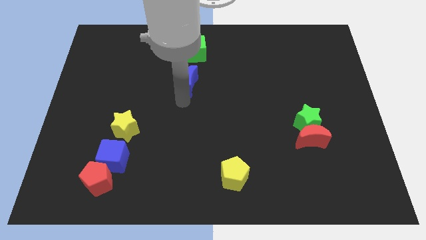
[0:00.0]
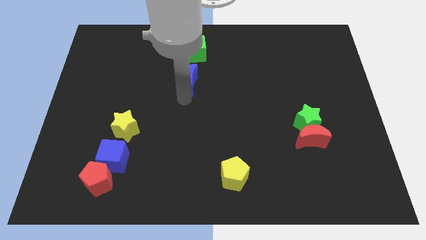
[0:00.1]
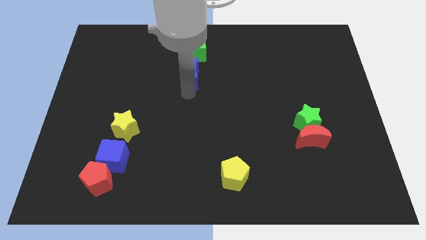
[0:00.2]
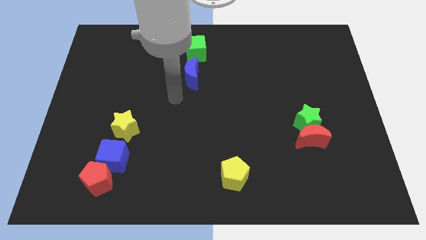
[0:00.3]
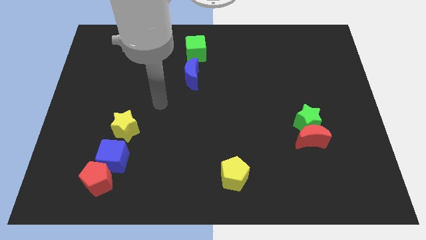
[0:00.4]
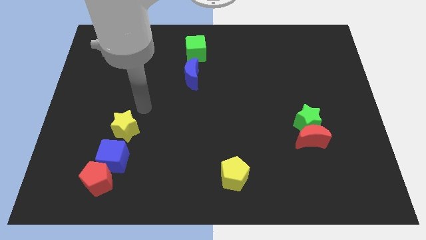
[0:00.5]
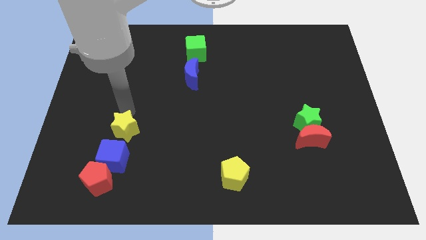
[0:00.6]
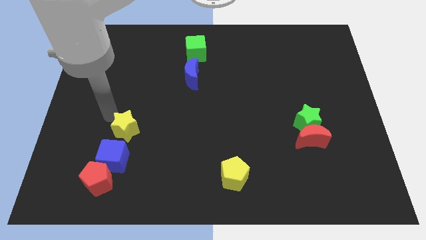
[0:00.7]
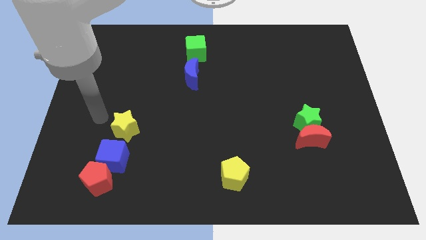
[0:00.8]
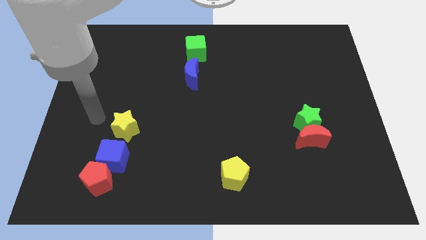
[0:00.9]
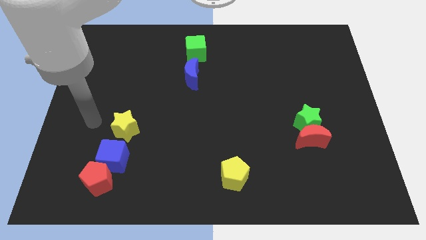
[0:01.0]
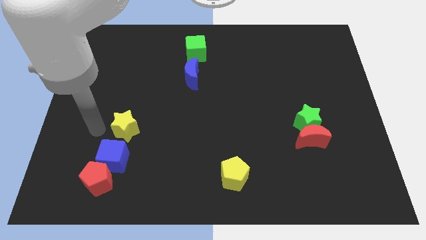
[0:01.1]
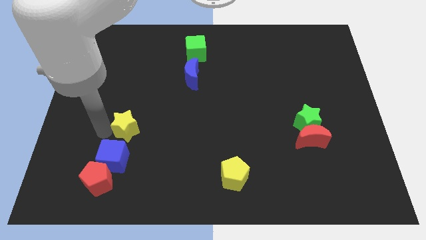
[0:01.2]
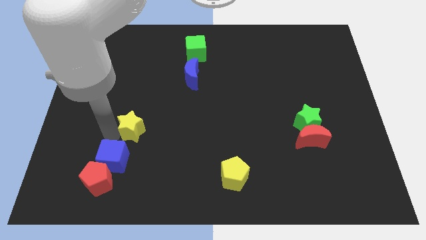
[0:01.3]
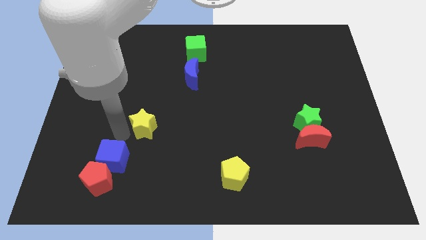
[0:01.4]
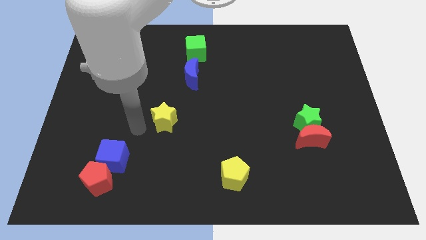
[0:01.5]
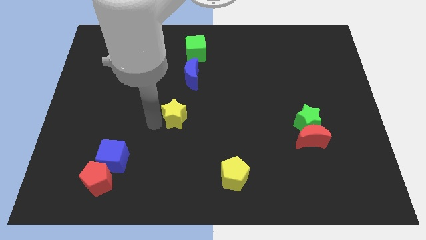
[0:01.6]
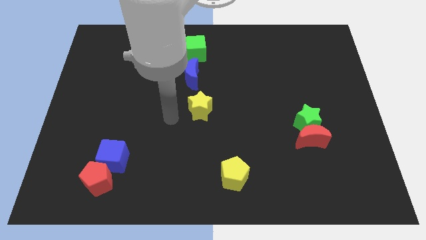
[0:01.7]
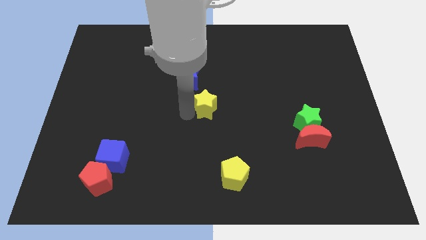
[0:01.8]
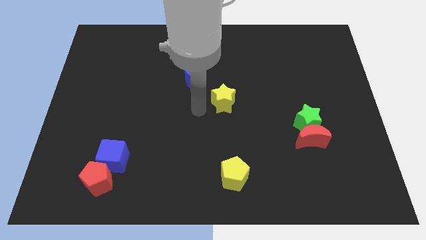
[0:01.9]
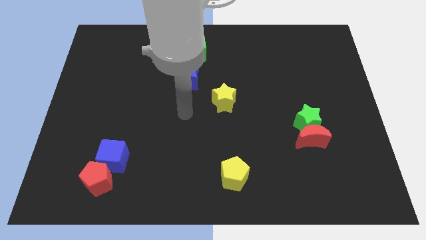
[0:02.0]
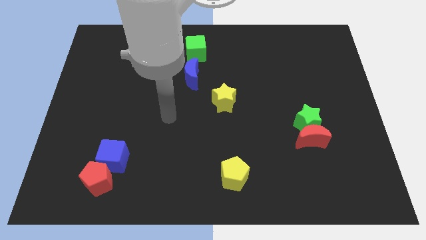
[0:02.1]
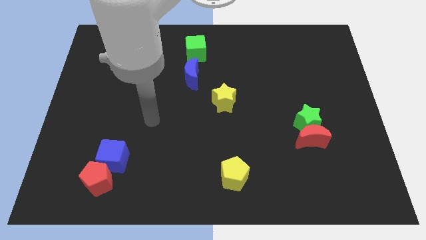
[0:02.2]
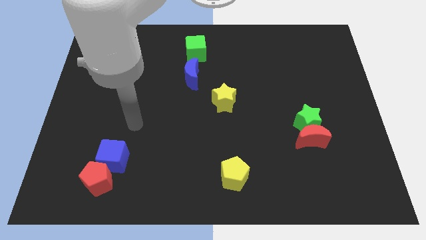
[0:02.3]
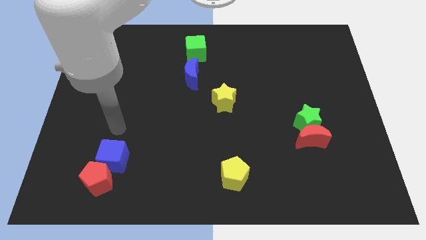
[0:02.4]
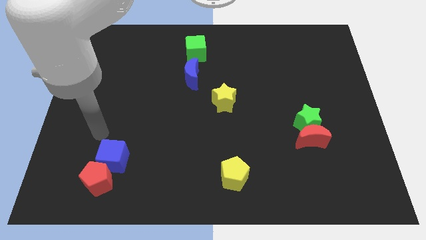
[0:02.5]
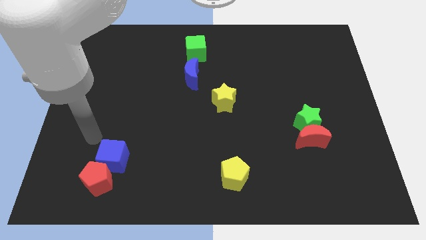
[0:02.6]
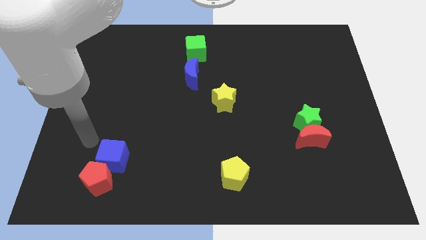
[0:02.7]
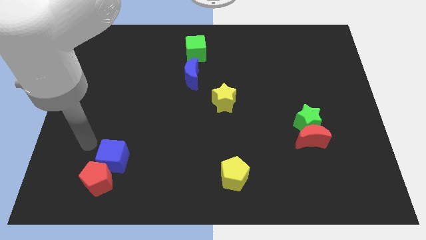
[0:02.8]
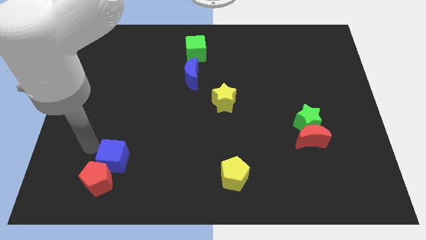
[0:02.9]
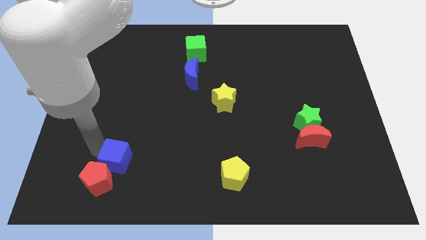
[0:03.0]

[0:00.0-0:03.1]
move the yellow star on top of yellow pentagon

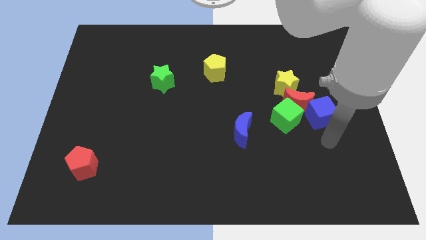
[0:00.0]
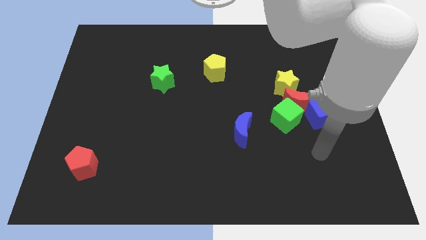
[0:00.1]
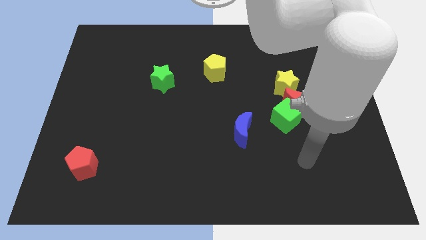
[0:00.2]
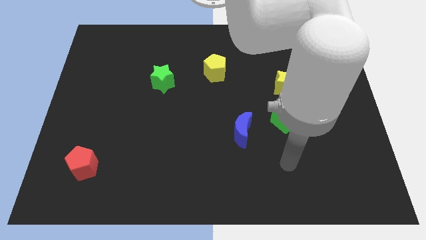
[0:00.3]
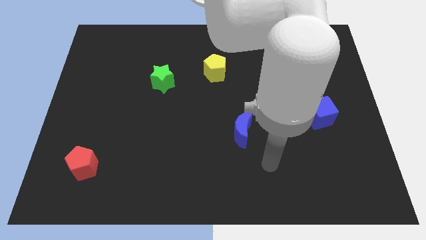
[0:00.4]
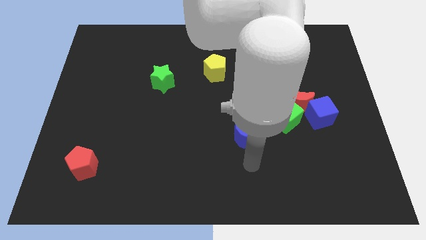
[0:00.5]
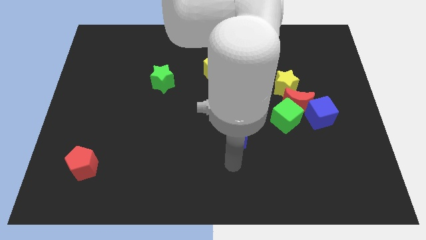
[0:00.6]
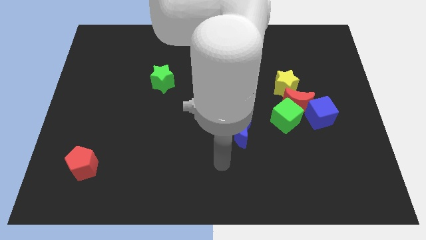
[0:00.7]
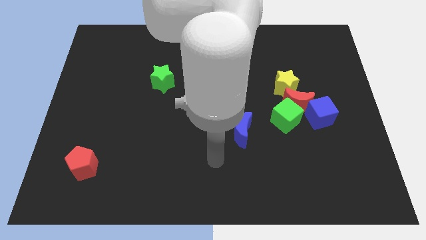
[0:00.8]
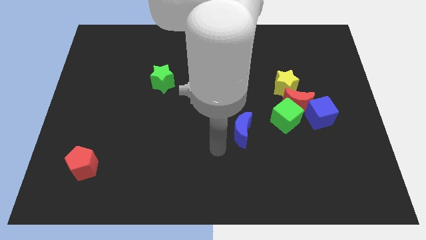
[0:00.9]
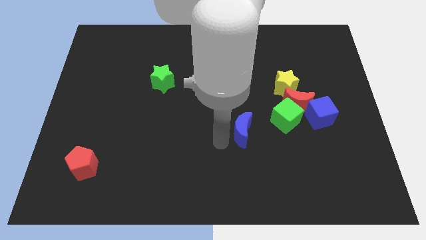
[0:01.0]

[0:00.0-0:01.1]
point the arm to the left bottom of the blue crescent

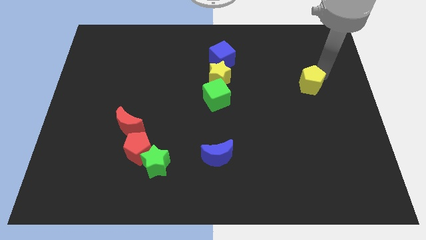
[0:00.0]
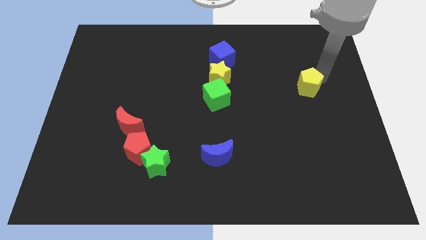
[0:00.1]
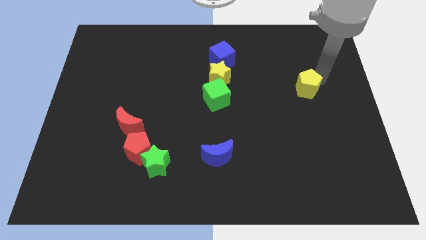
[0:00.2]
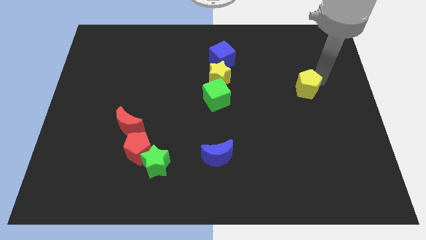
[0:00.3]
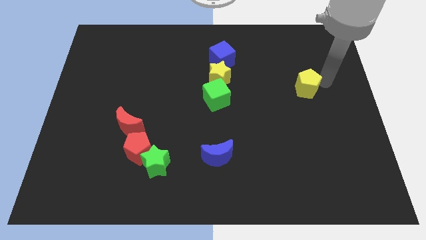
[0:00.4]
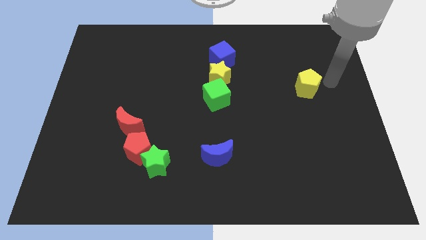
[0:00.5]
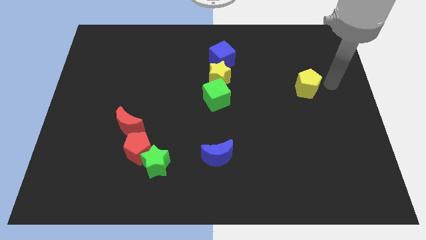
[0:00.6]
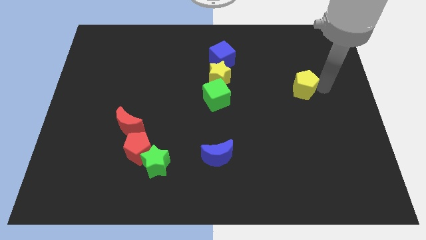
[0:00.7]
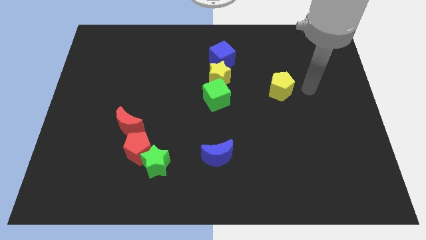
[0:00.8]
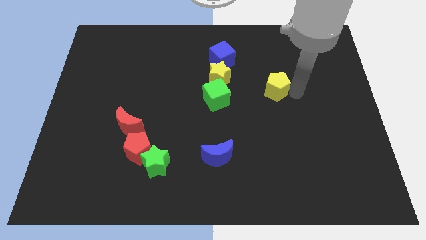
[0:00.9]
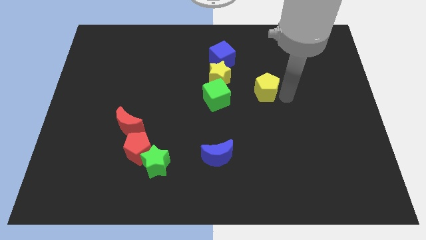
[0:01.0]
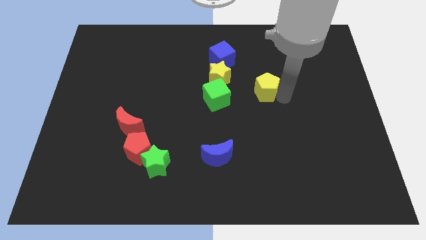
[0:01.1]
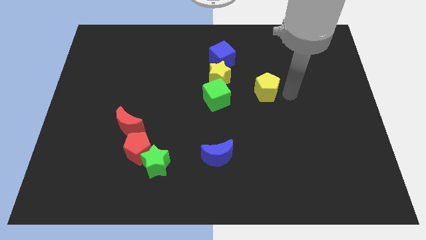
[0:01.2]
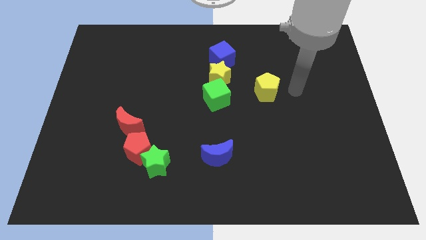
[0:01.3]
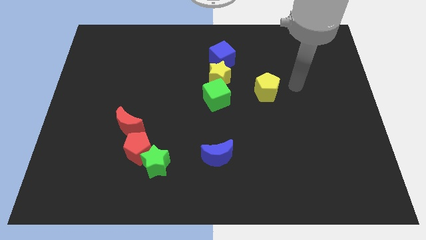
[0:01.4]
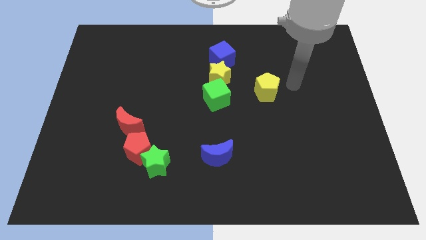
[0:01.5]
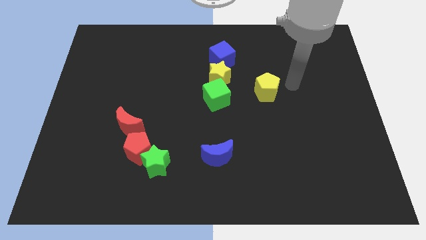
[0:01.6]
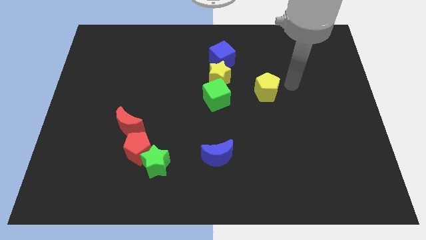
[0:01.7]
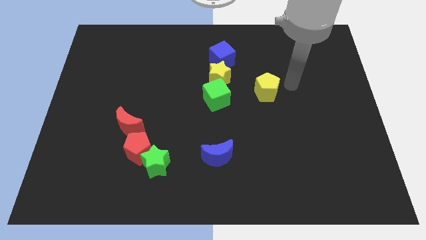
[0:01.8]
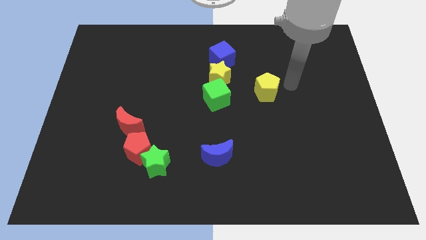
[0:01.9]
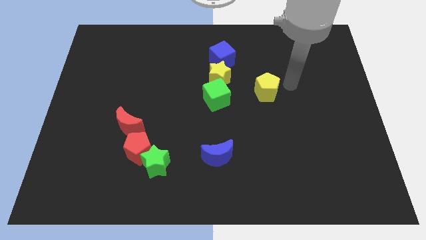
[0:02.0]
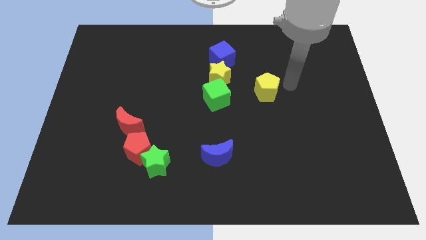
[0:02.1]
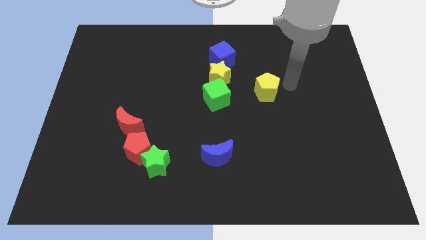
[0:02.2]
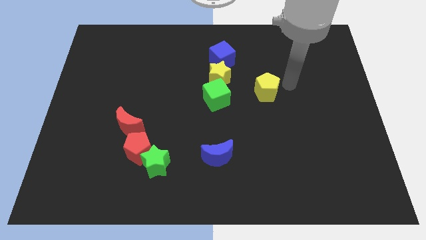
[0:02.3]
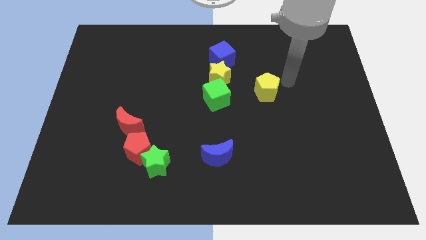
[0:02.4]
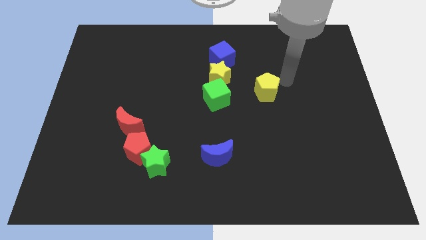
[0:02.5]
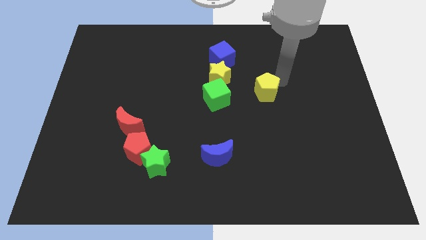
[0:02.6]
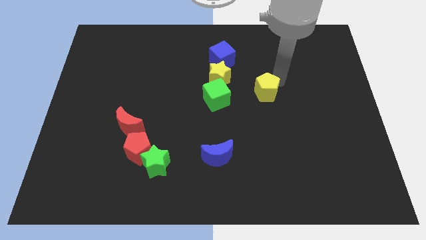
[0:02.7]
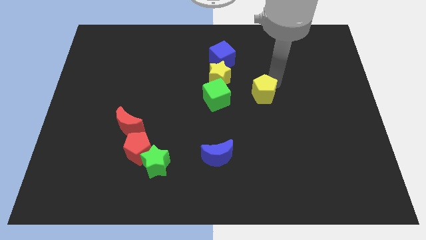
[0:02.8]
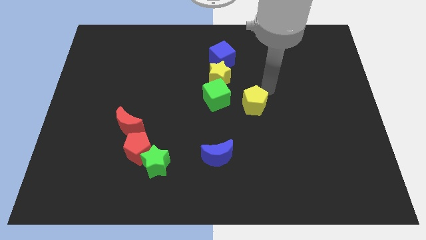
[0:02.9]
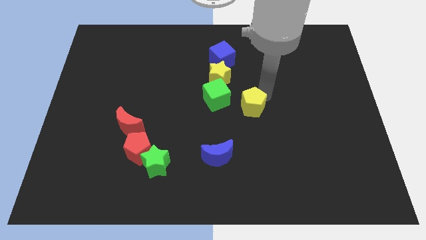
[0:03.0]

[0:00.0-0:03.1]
move the yellow pentagon diagonally right of the green cube

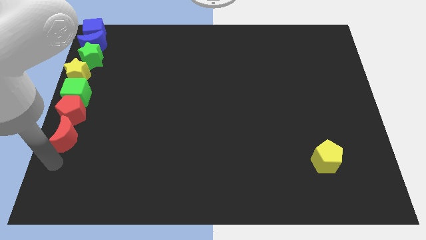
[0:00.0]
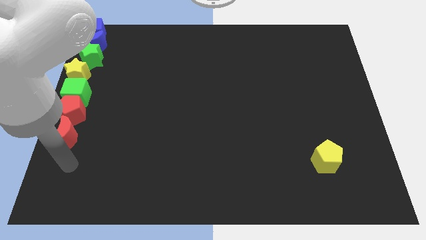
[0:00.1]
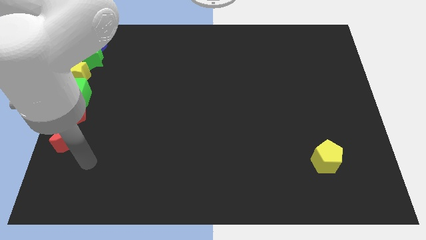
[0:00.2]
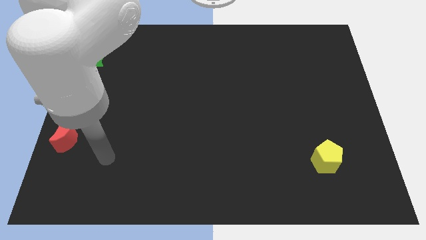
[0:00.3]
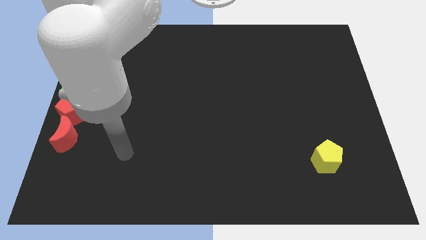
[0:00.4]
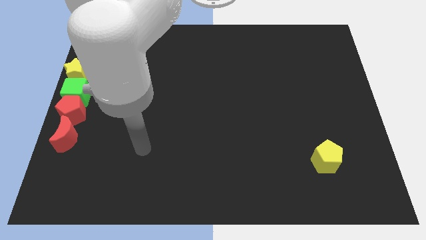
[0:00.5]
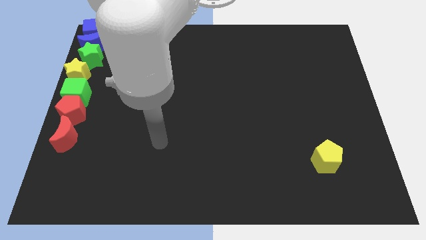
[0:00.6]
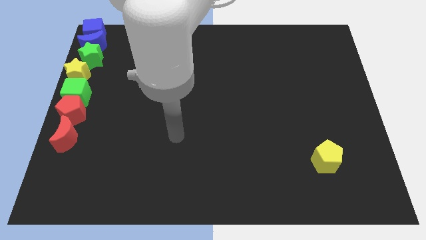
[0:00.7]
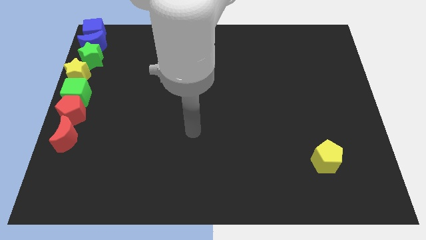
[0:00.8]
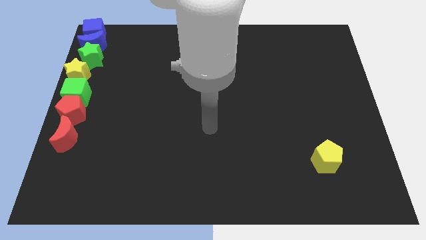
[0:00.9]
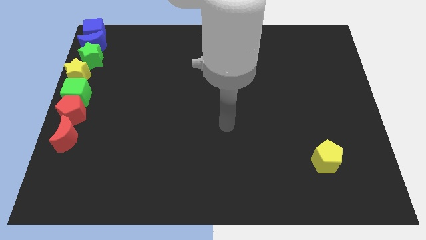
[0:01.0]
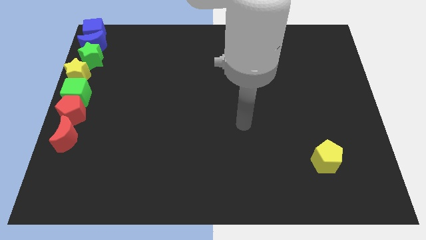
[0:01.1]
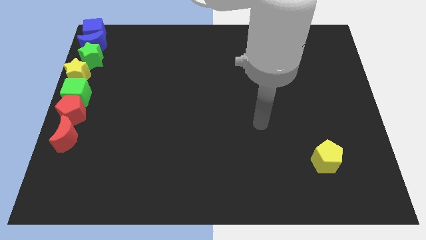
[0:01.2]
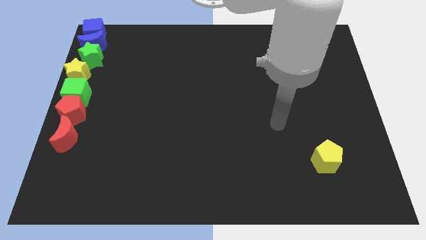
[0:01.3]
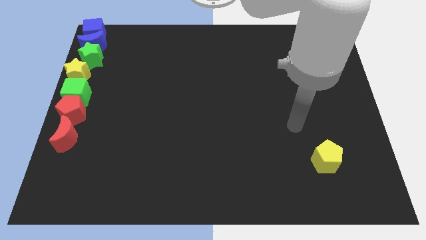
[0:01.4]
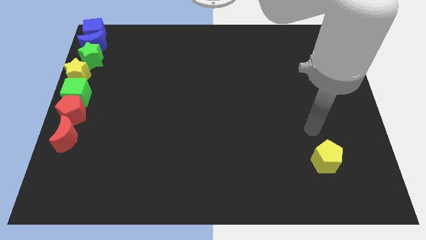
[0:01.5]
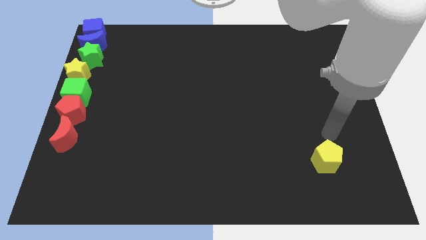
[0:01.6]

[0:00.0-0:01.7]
place your arm at the top of yellow pentagon
